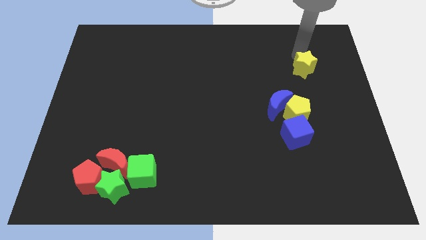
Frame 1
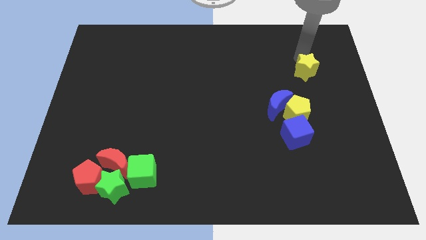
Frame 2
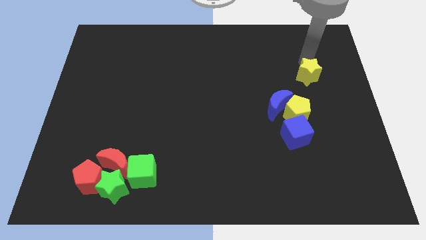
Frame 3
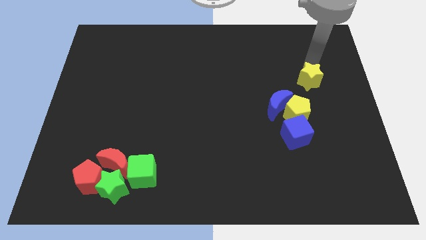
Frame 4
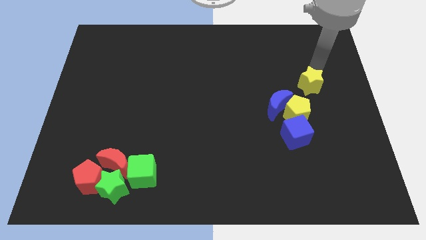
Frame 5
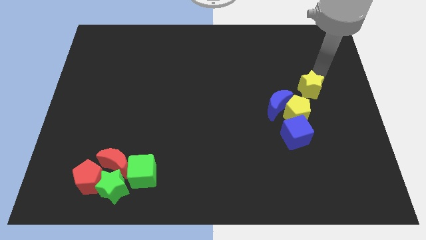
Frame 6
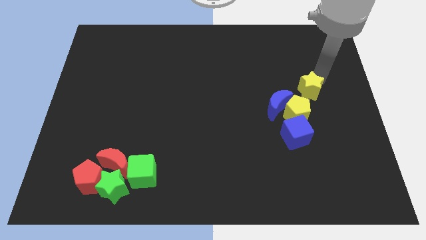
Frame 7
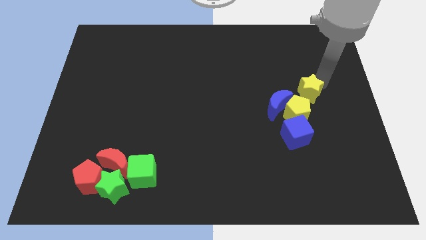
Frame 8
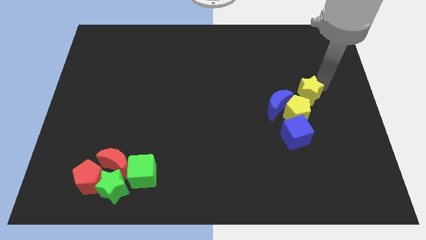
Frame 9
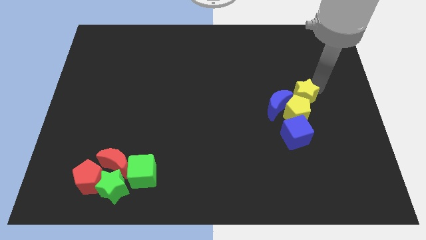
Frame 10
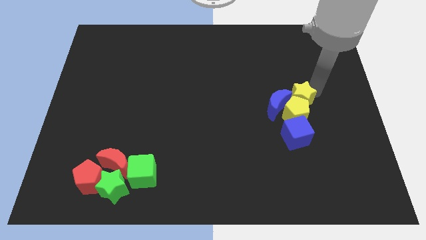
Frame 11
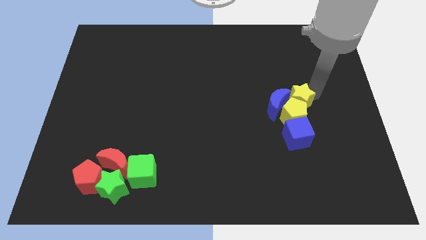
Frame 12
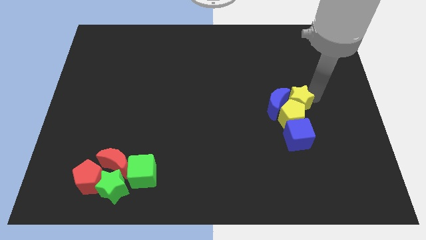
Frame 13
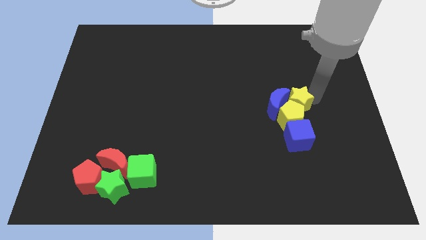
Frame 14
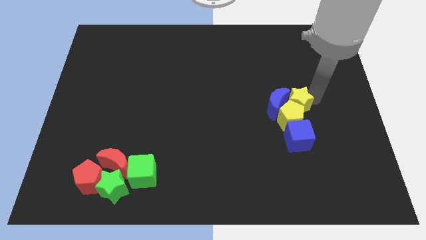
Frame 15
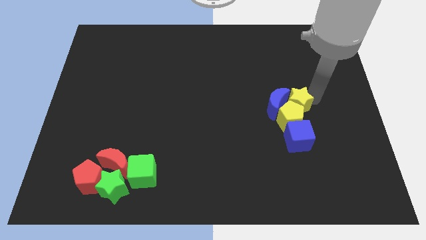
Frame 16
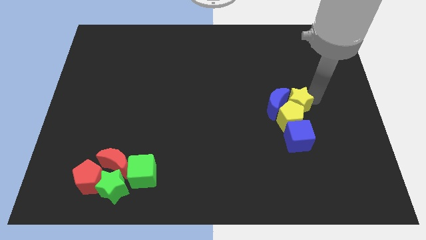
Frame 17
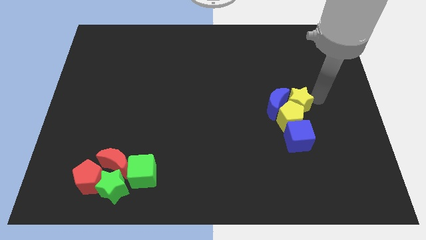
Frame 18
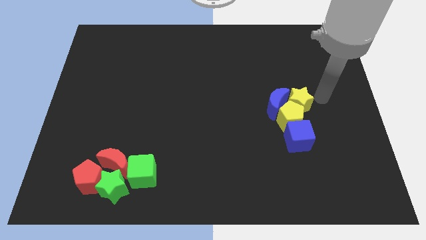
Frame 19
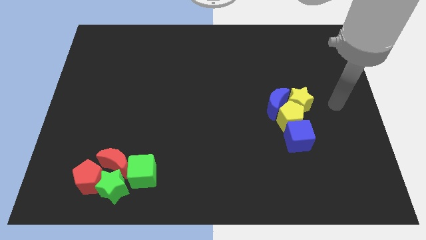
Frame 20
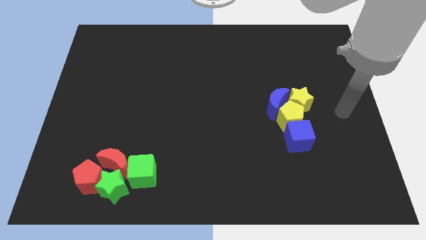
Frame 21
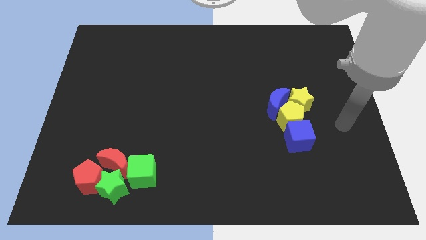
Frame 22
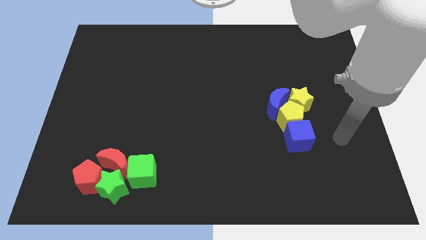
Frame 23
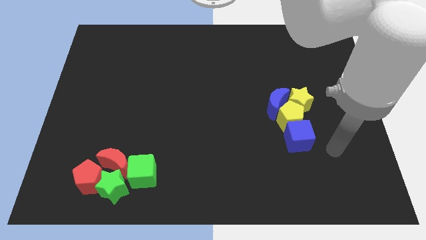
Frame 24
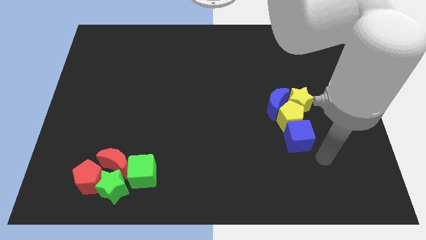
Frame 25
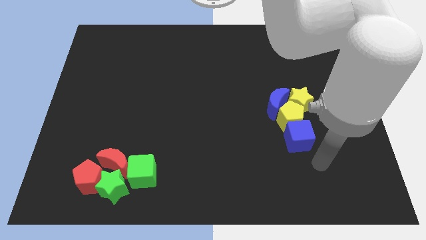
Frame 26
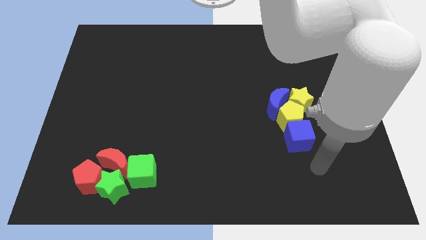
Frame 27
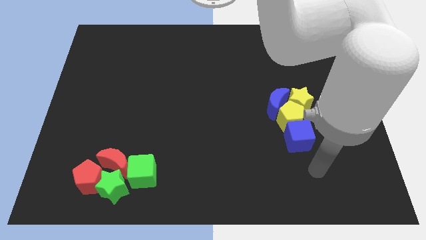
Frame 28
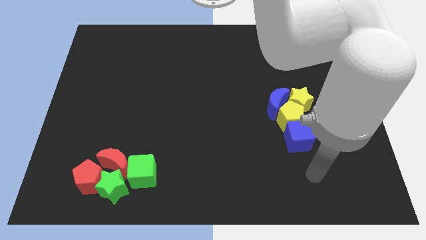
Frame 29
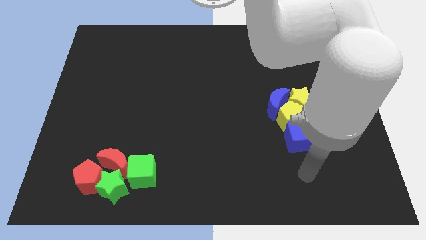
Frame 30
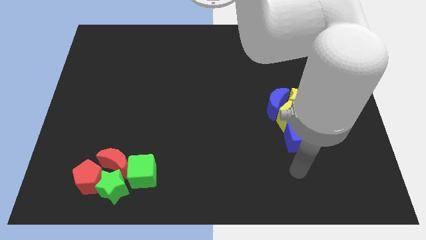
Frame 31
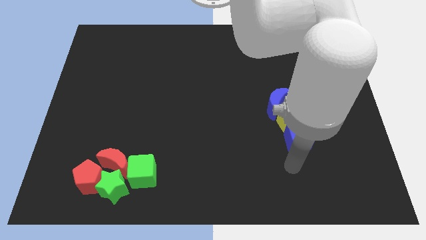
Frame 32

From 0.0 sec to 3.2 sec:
push the yellow star into the group of blocks

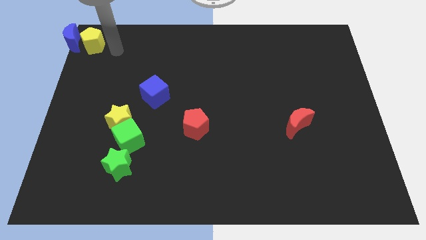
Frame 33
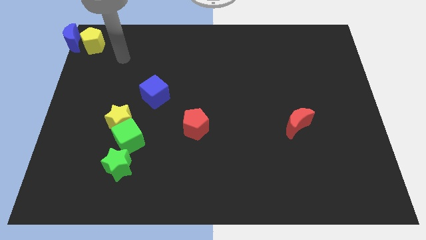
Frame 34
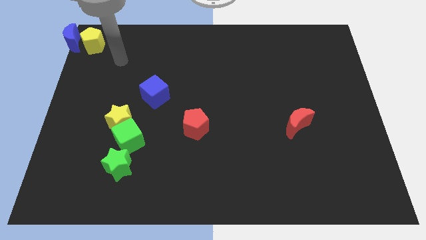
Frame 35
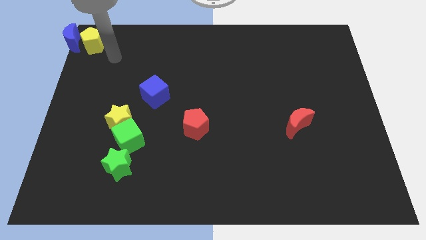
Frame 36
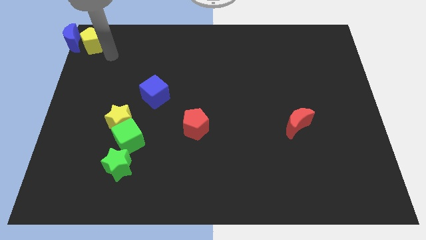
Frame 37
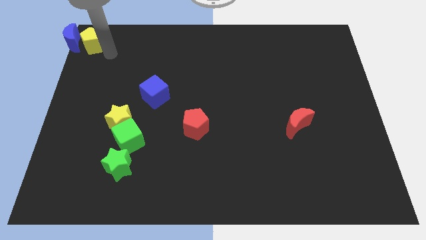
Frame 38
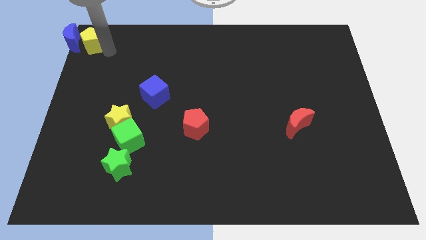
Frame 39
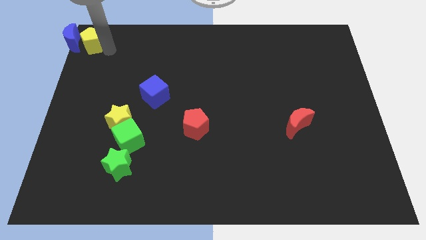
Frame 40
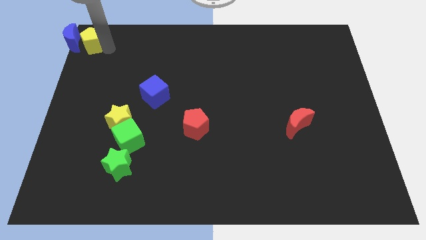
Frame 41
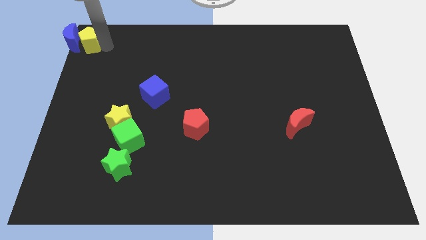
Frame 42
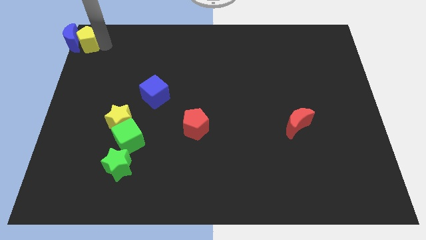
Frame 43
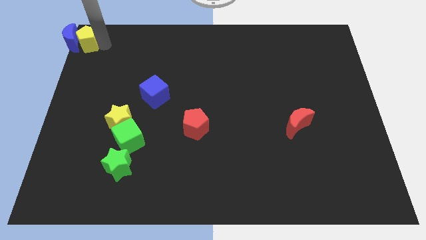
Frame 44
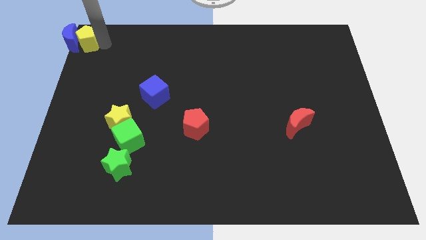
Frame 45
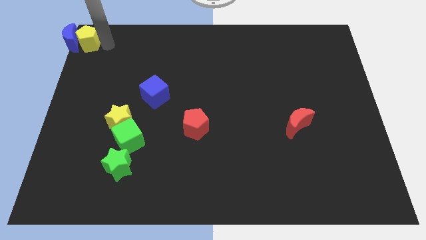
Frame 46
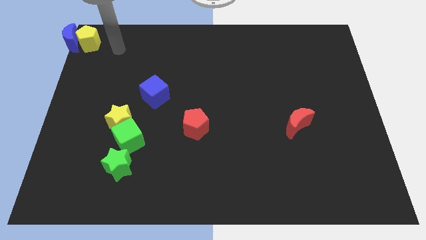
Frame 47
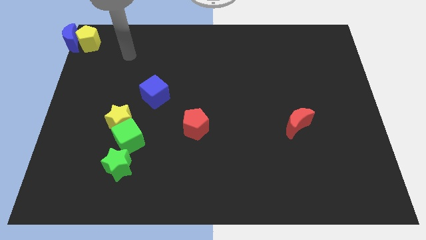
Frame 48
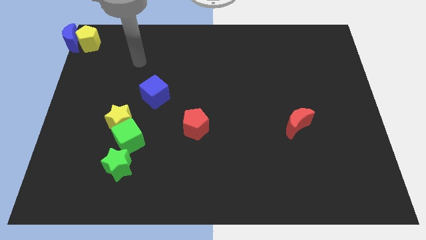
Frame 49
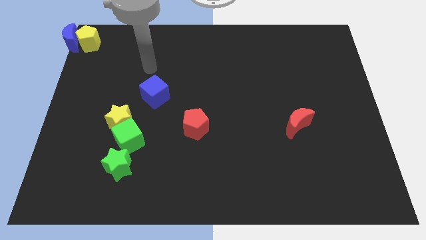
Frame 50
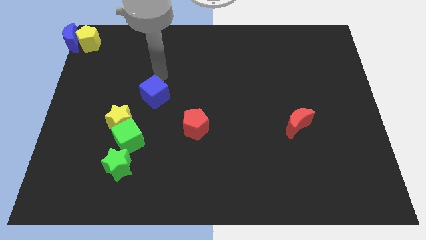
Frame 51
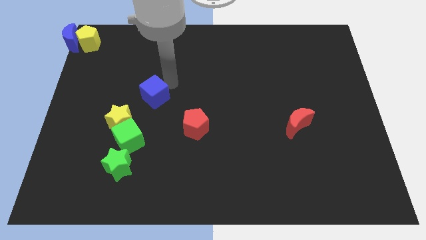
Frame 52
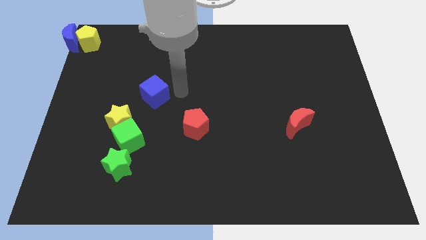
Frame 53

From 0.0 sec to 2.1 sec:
move the yellow pentagon into the blue moon

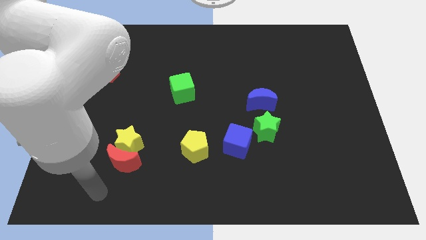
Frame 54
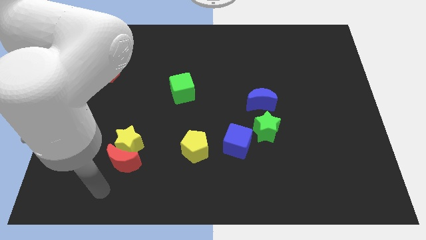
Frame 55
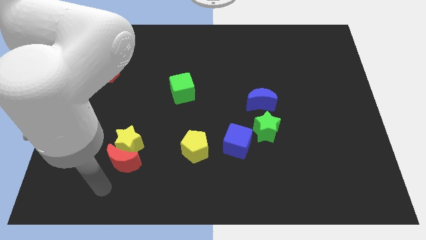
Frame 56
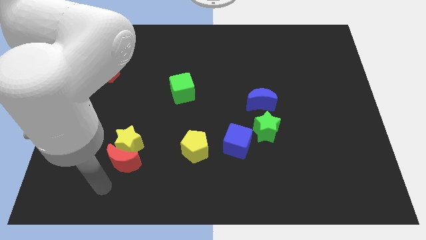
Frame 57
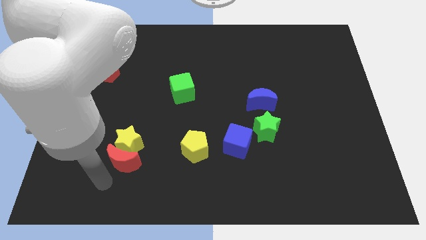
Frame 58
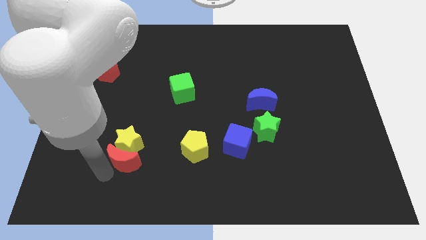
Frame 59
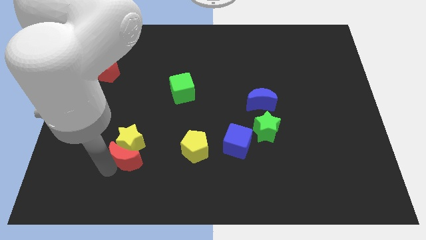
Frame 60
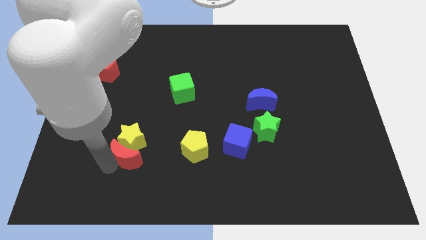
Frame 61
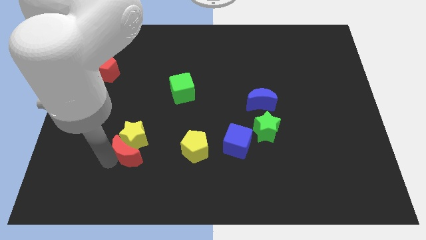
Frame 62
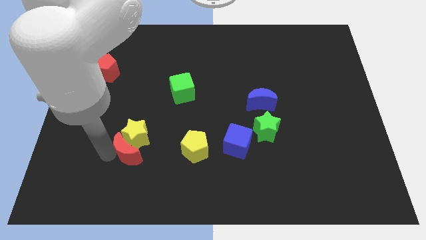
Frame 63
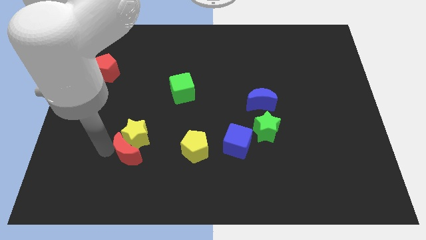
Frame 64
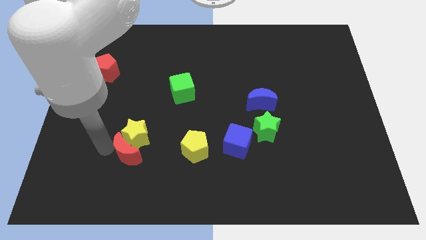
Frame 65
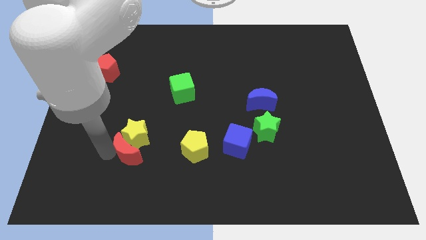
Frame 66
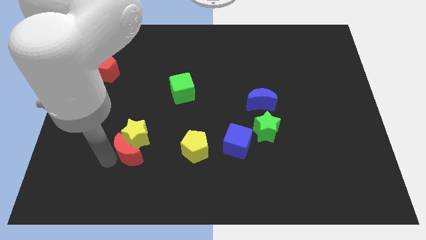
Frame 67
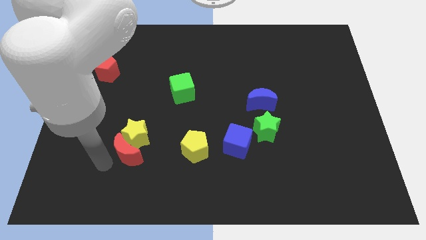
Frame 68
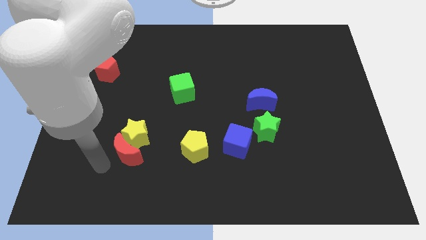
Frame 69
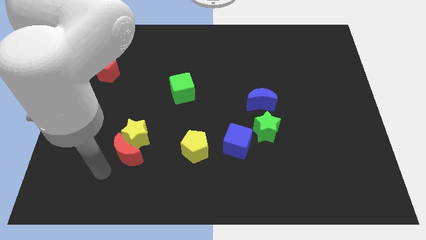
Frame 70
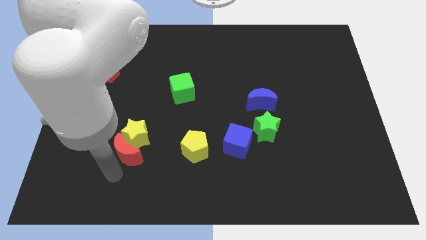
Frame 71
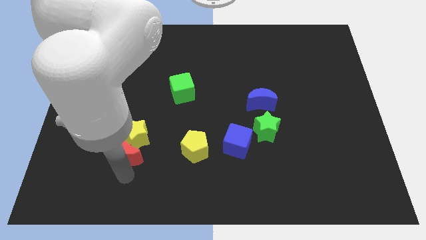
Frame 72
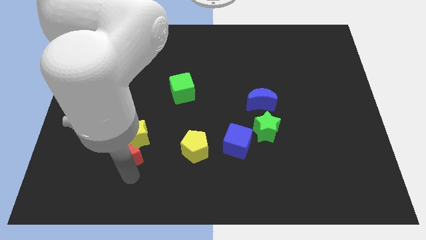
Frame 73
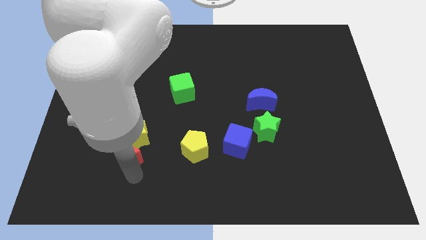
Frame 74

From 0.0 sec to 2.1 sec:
slide the red crescent and yellow star diagonal to the green cube

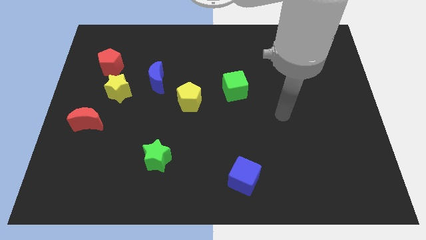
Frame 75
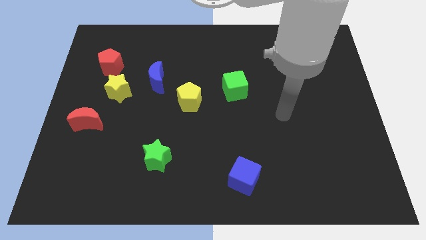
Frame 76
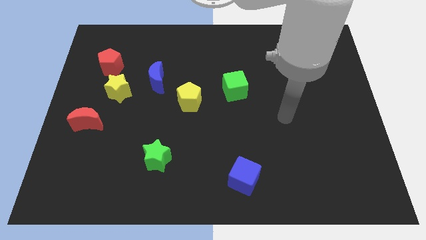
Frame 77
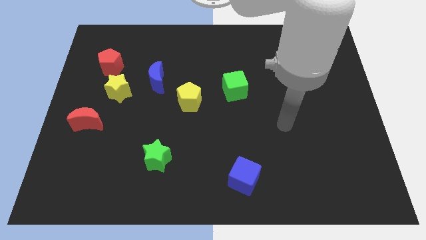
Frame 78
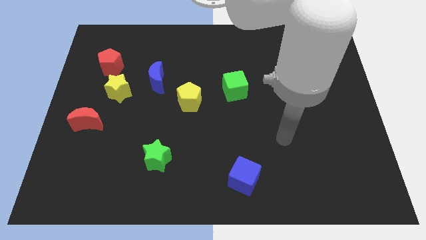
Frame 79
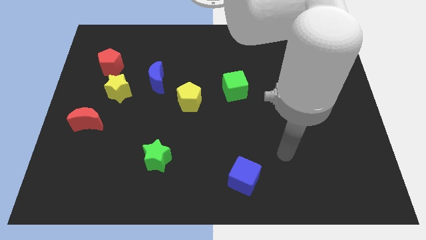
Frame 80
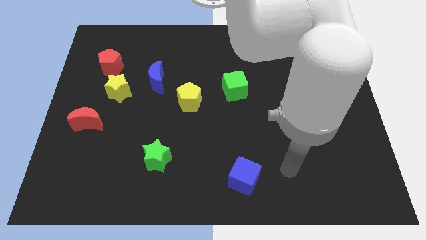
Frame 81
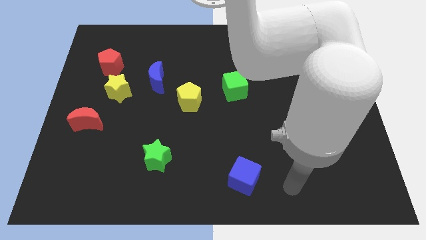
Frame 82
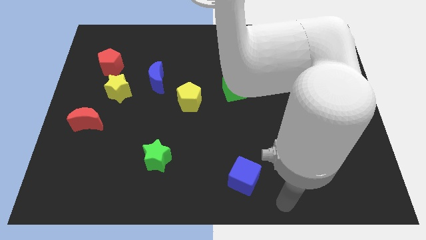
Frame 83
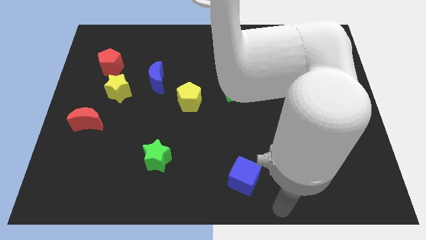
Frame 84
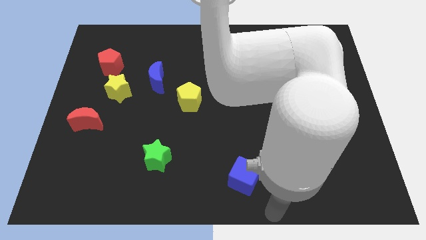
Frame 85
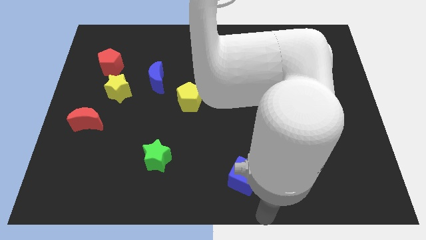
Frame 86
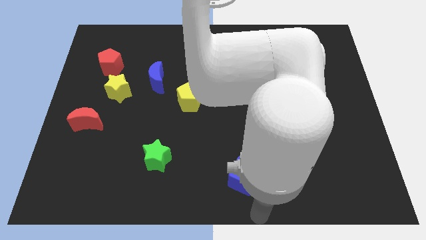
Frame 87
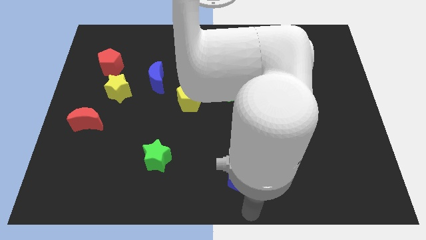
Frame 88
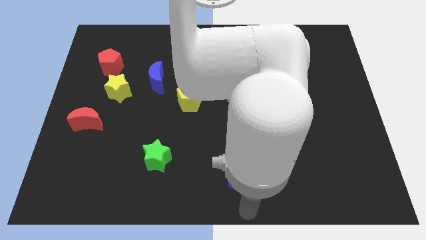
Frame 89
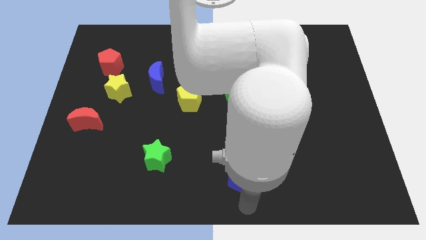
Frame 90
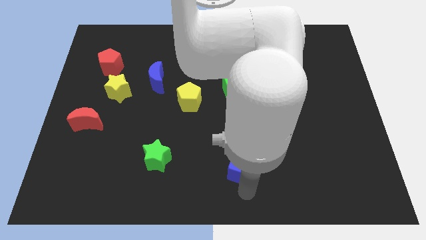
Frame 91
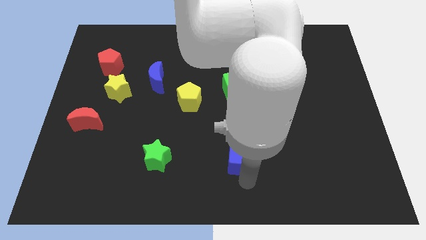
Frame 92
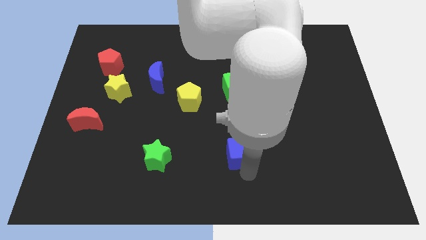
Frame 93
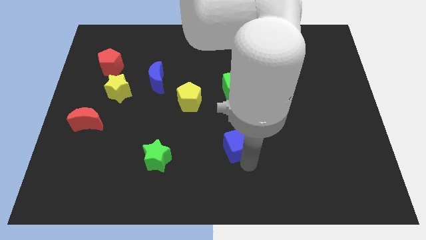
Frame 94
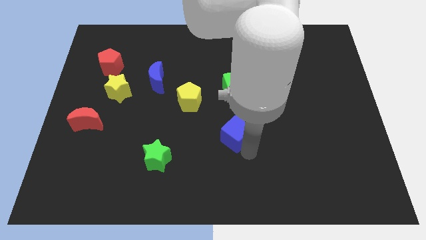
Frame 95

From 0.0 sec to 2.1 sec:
push the blue cube towards the green cube
